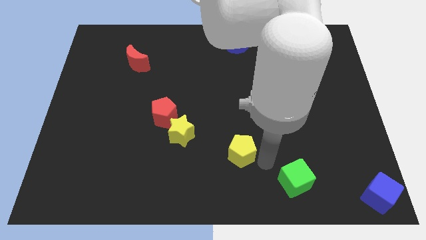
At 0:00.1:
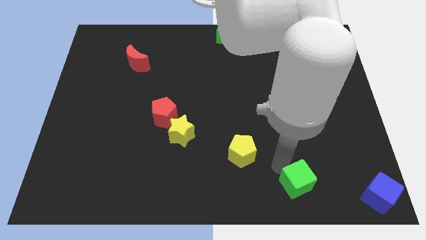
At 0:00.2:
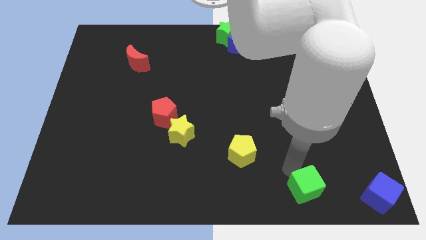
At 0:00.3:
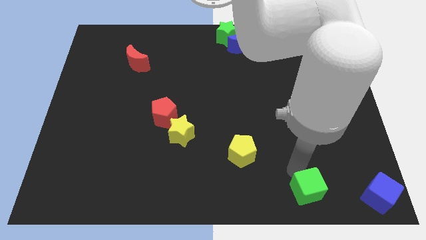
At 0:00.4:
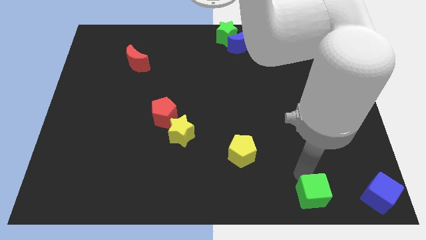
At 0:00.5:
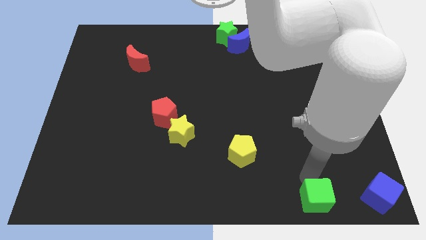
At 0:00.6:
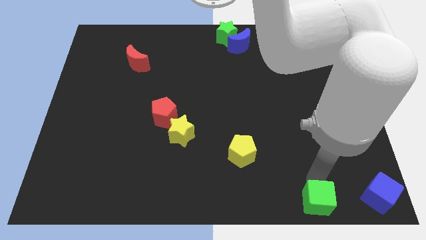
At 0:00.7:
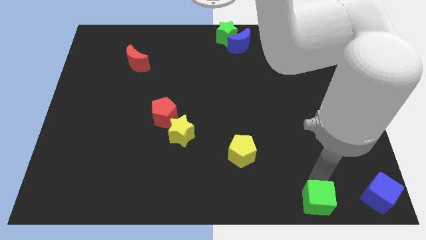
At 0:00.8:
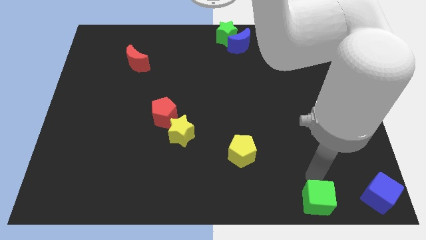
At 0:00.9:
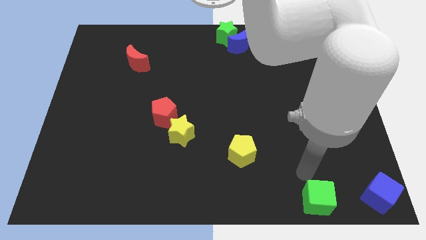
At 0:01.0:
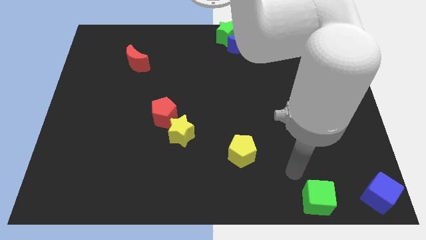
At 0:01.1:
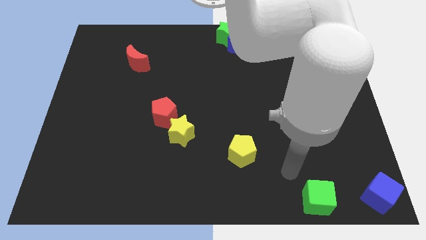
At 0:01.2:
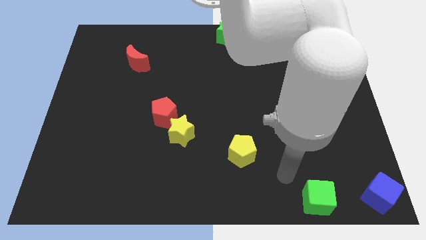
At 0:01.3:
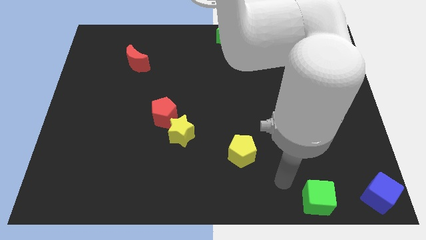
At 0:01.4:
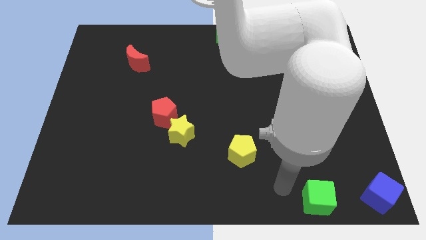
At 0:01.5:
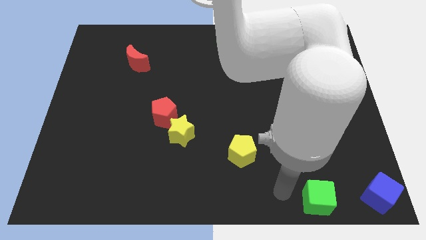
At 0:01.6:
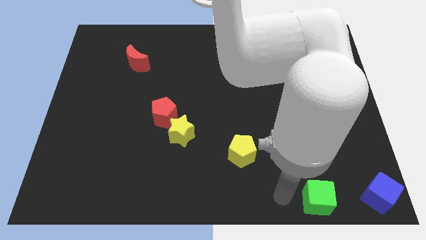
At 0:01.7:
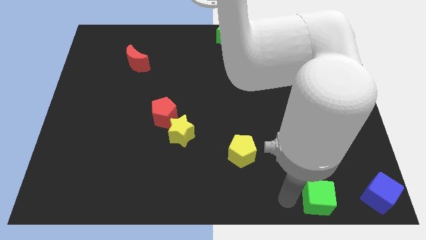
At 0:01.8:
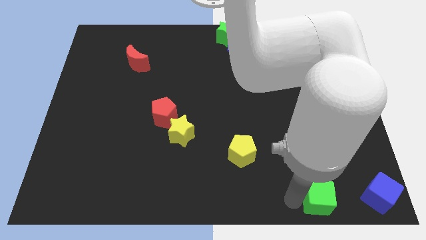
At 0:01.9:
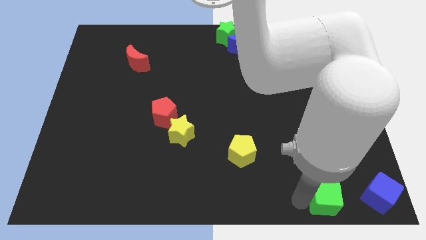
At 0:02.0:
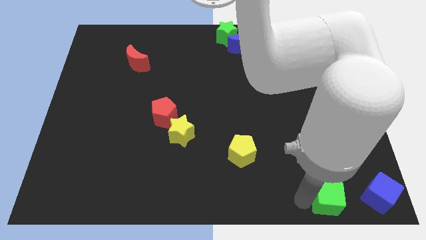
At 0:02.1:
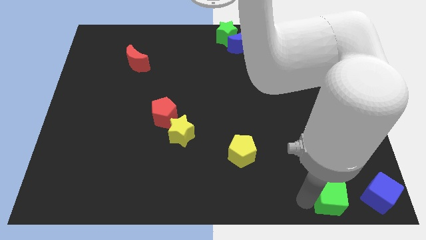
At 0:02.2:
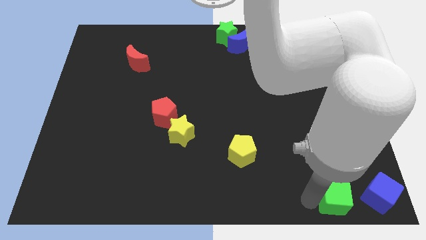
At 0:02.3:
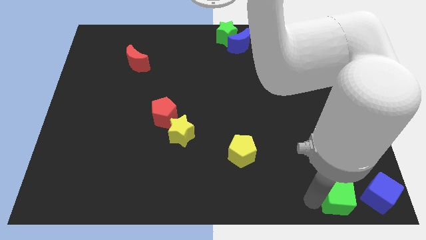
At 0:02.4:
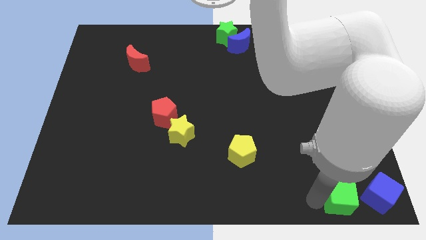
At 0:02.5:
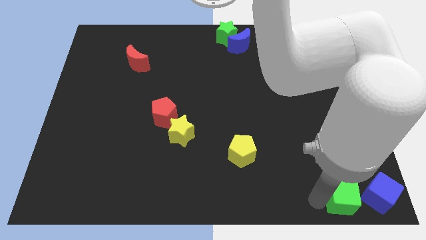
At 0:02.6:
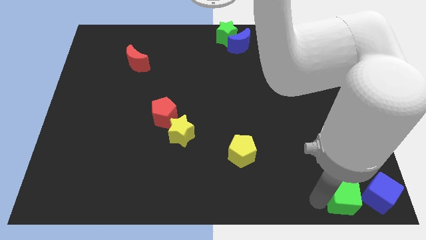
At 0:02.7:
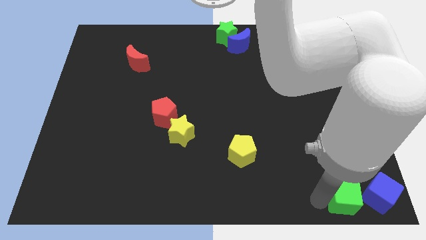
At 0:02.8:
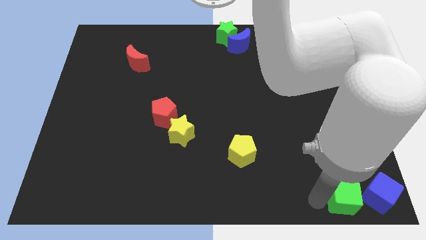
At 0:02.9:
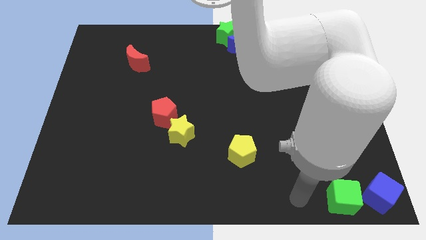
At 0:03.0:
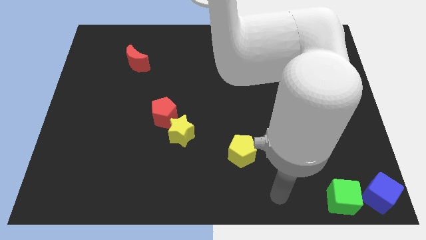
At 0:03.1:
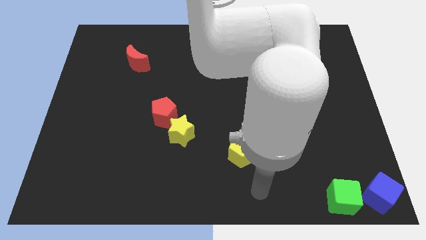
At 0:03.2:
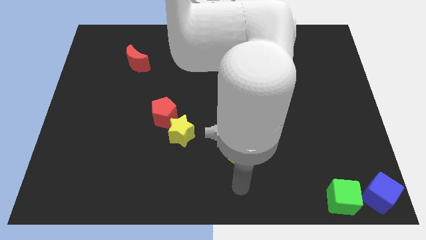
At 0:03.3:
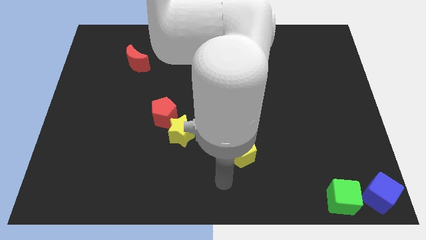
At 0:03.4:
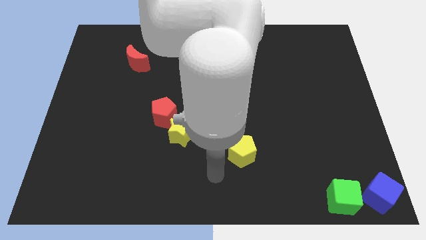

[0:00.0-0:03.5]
move the green cube towards the bottom right corner of the board

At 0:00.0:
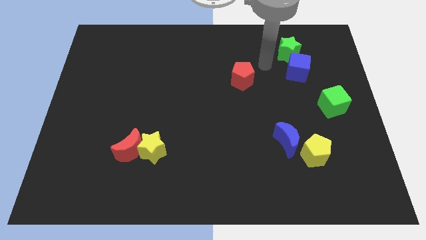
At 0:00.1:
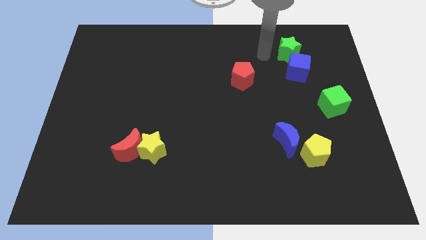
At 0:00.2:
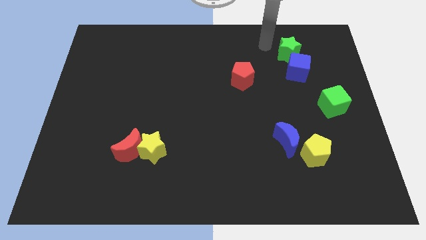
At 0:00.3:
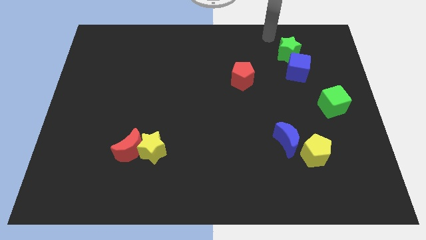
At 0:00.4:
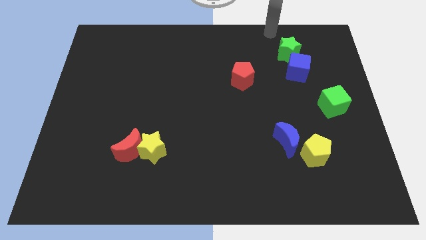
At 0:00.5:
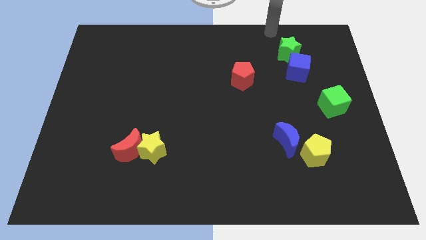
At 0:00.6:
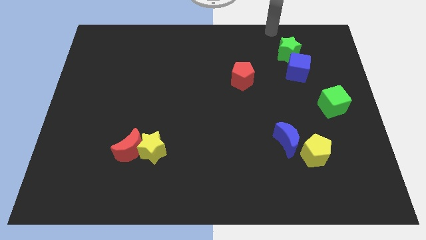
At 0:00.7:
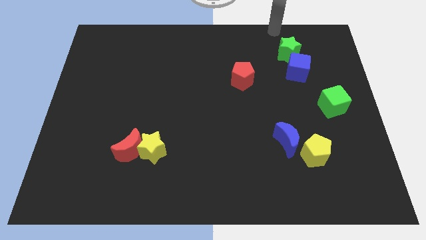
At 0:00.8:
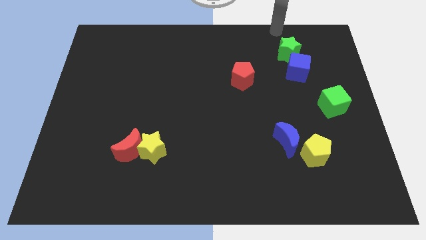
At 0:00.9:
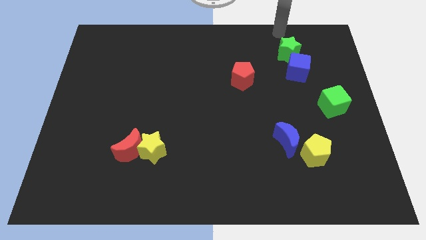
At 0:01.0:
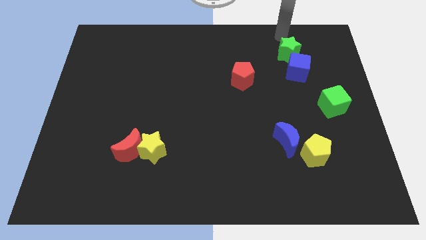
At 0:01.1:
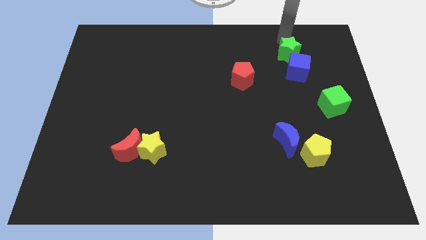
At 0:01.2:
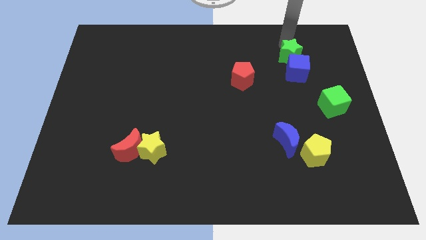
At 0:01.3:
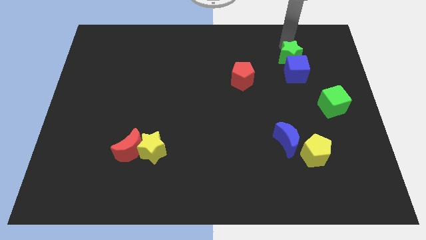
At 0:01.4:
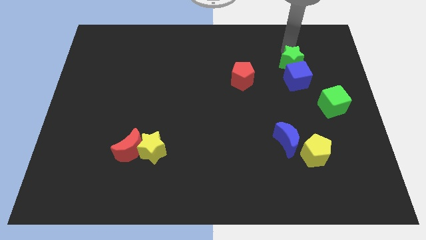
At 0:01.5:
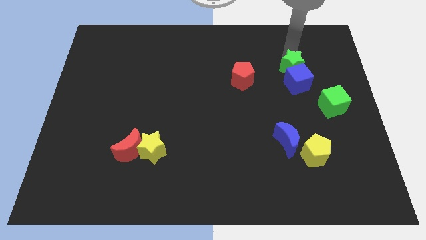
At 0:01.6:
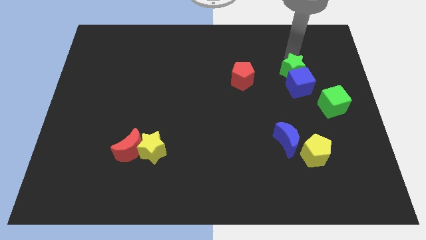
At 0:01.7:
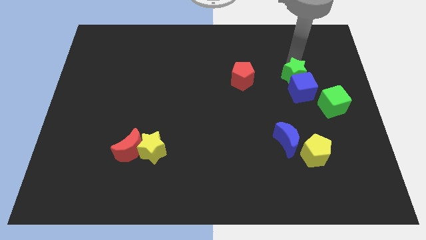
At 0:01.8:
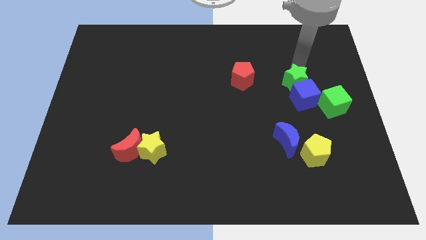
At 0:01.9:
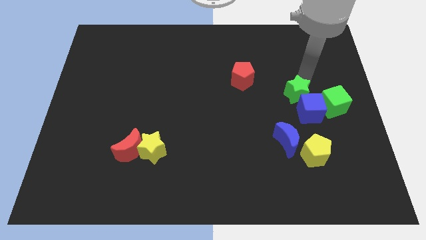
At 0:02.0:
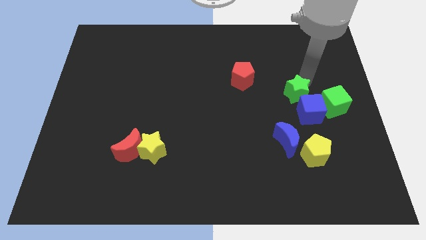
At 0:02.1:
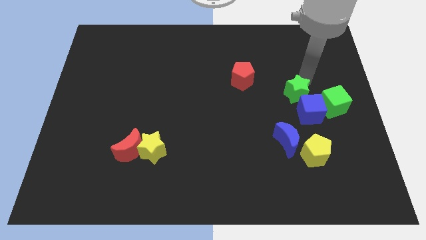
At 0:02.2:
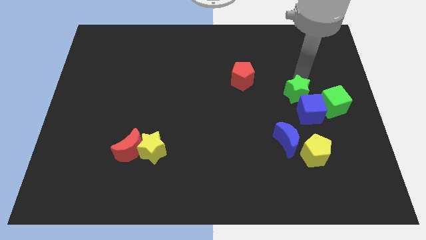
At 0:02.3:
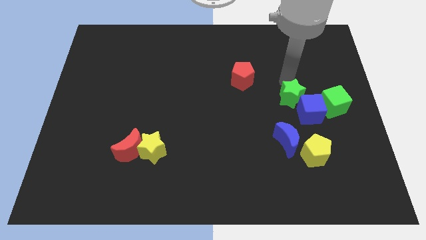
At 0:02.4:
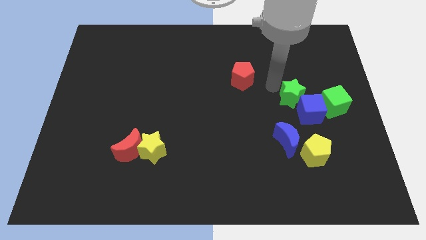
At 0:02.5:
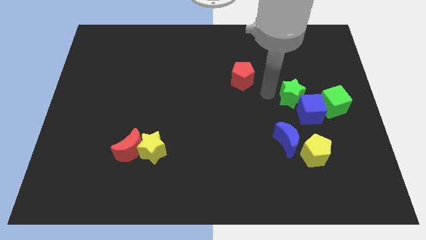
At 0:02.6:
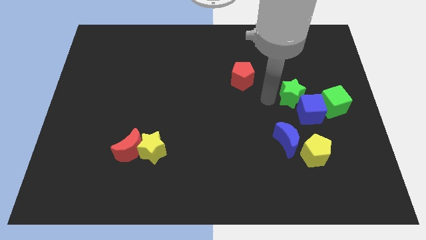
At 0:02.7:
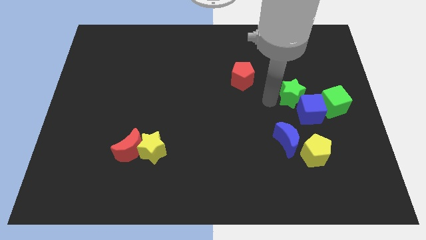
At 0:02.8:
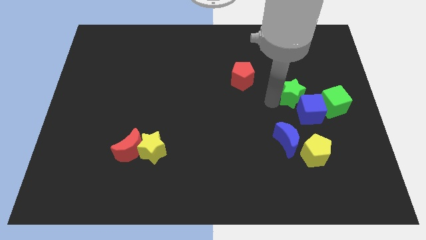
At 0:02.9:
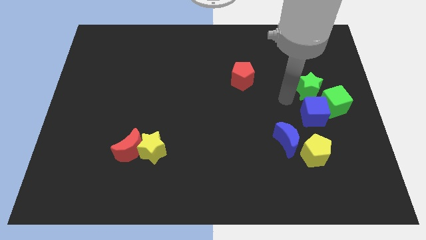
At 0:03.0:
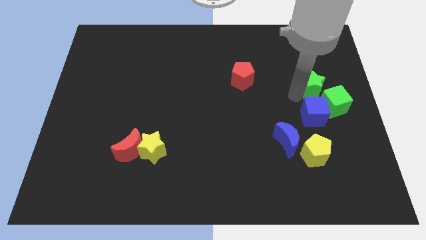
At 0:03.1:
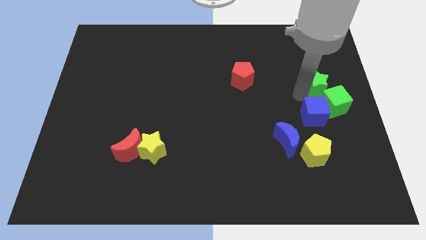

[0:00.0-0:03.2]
move the green star and the blue cube to the left of the green cube

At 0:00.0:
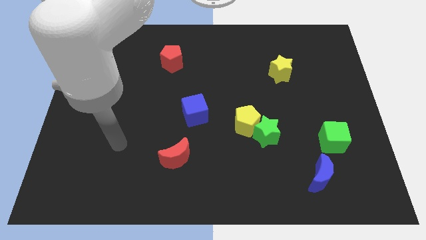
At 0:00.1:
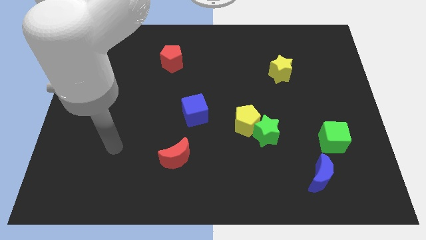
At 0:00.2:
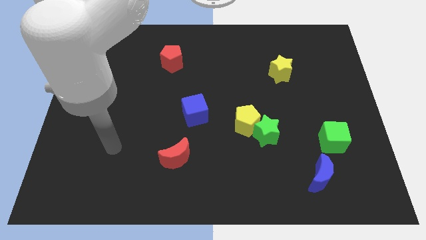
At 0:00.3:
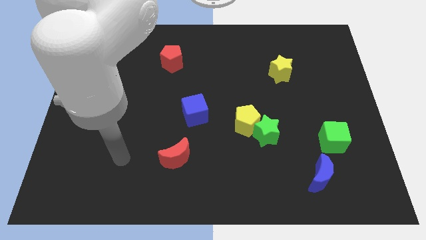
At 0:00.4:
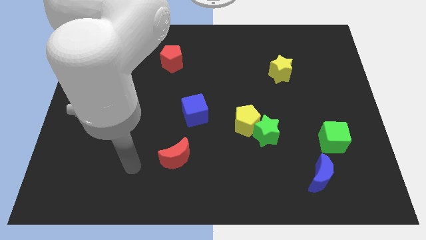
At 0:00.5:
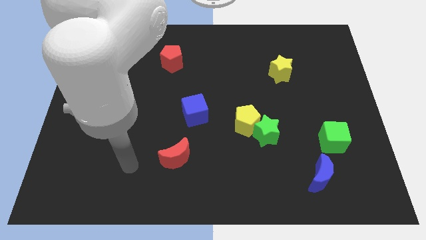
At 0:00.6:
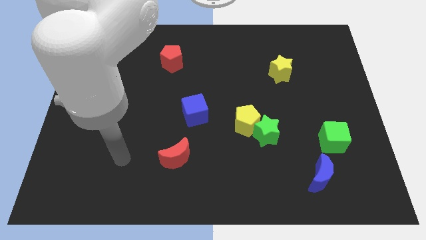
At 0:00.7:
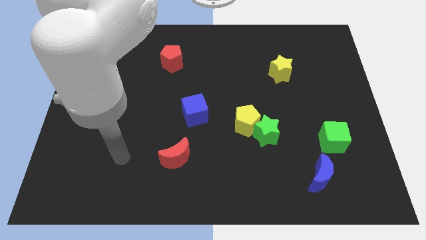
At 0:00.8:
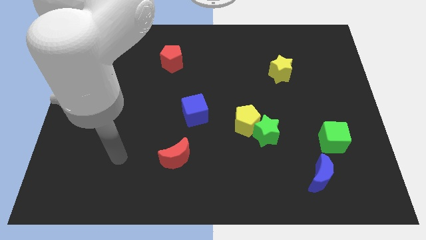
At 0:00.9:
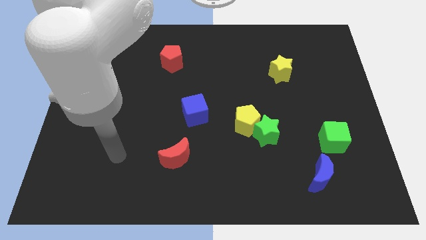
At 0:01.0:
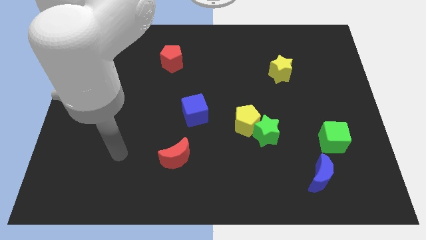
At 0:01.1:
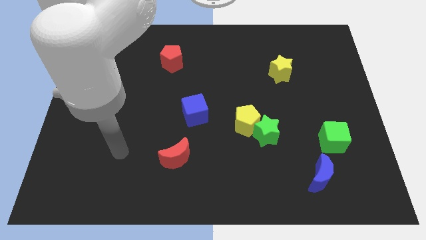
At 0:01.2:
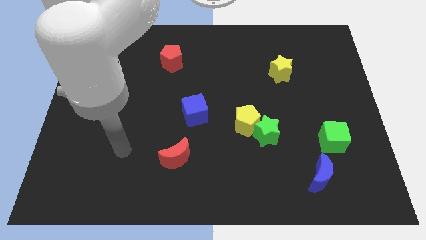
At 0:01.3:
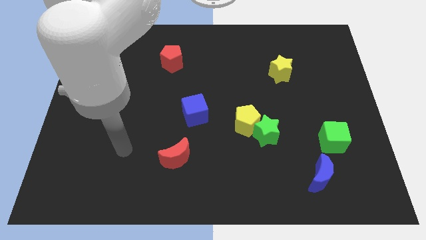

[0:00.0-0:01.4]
point your arm to the left side of the red moon

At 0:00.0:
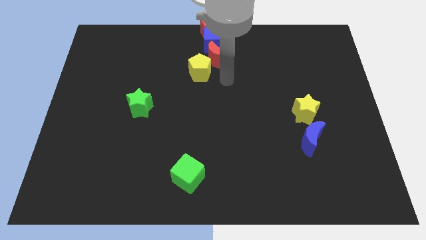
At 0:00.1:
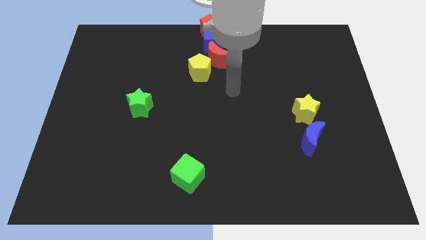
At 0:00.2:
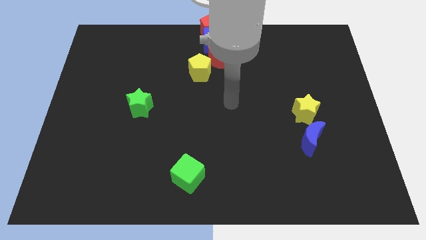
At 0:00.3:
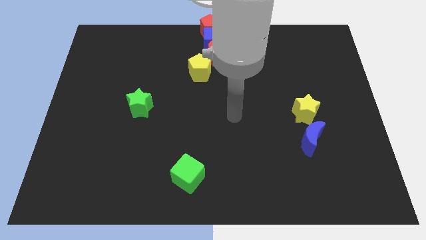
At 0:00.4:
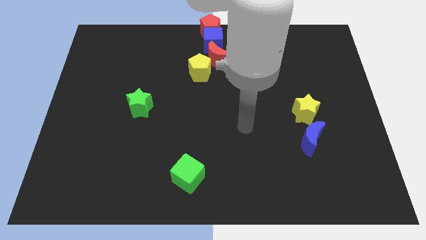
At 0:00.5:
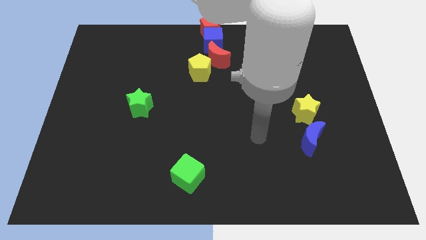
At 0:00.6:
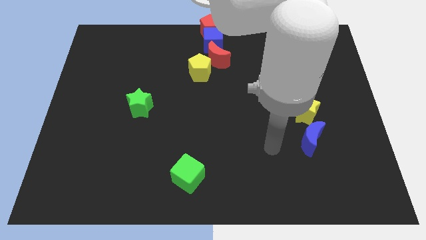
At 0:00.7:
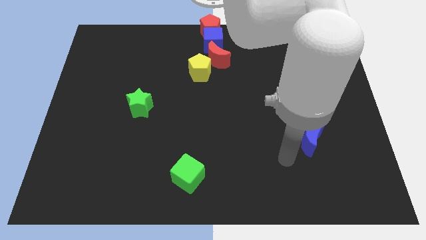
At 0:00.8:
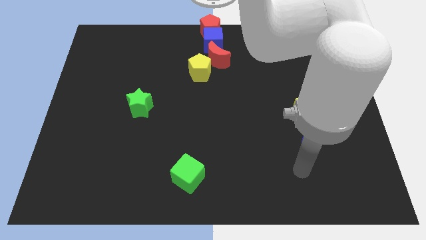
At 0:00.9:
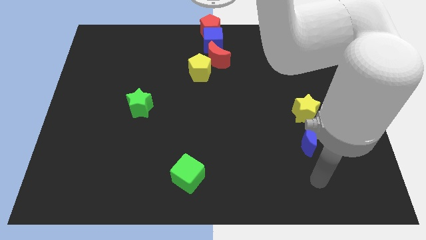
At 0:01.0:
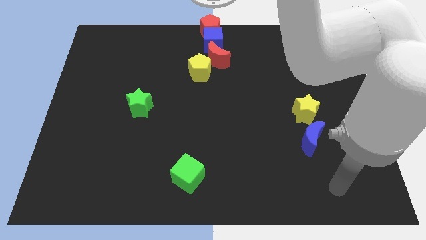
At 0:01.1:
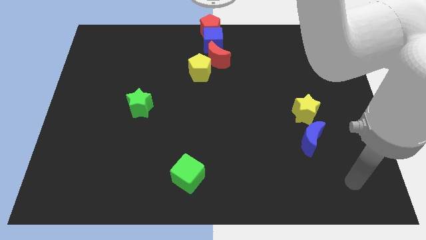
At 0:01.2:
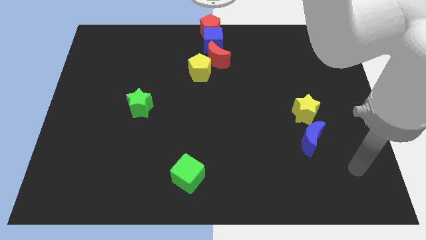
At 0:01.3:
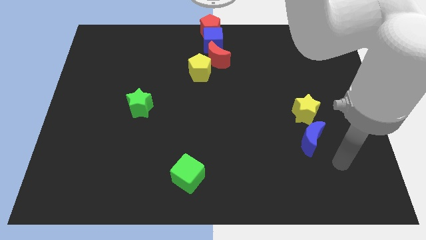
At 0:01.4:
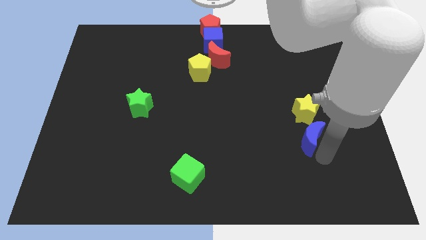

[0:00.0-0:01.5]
point your arm towards blue moon
